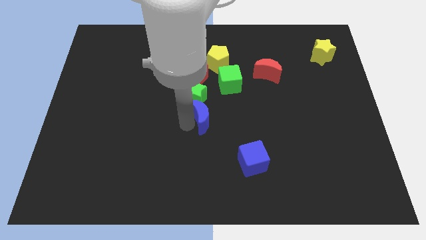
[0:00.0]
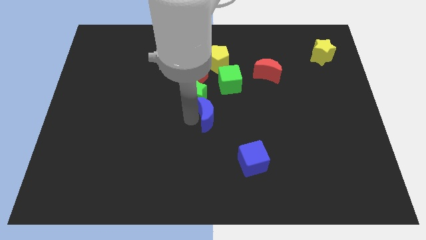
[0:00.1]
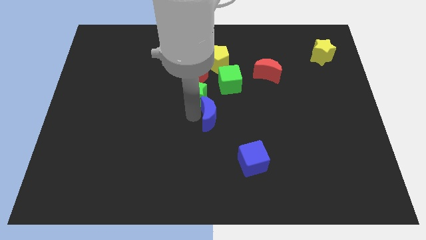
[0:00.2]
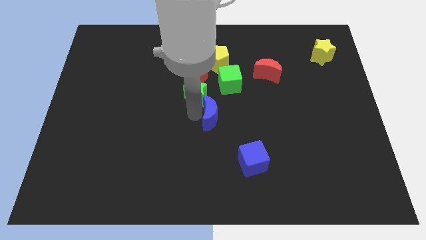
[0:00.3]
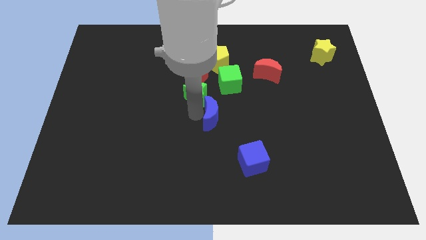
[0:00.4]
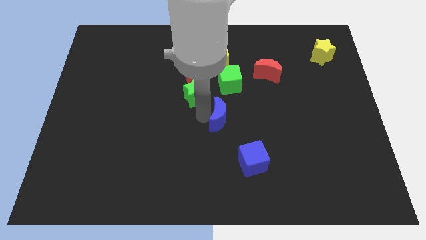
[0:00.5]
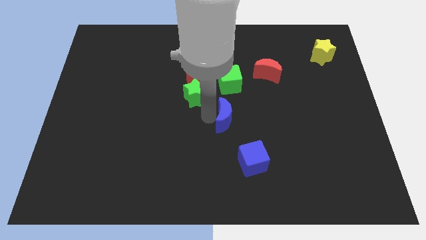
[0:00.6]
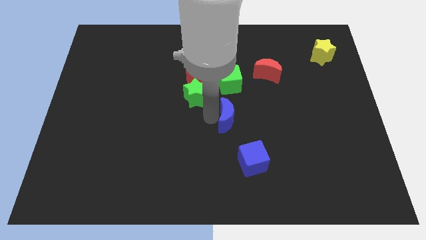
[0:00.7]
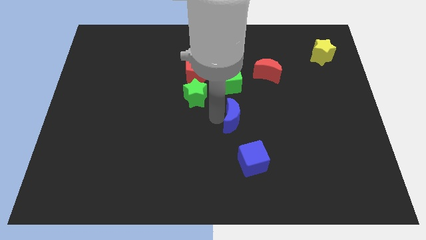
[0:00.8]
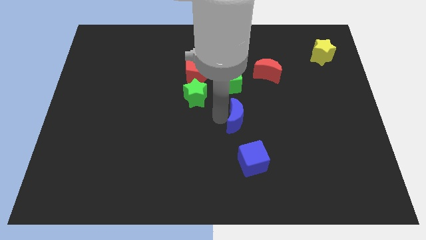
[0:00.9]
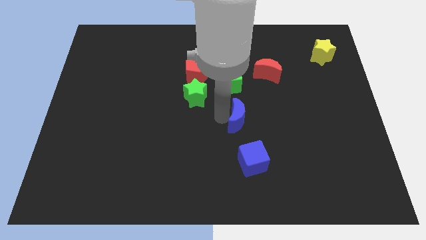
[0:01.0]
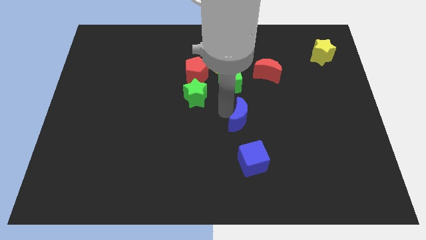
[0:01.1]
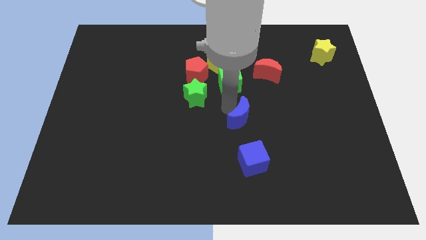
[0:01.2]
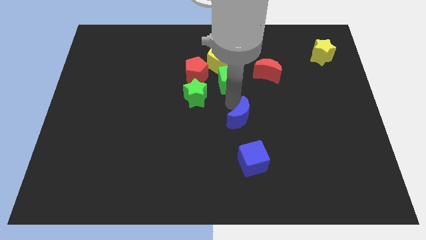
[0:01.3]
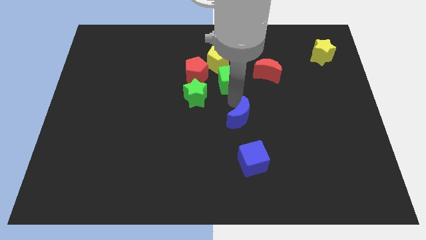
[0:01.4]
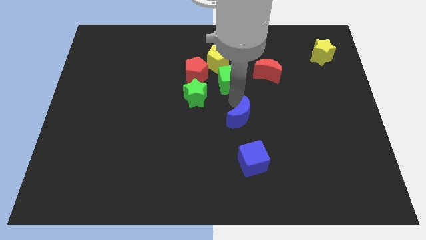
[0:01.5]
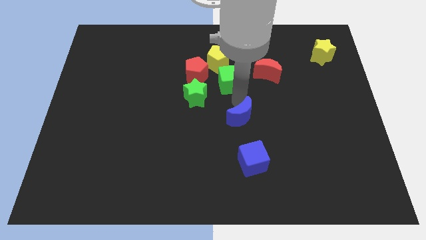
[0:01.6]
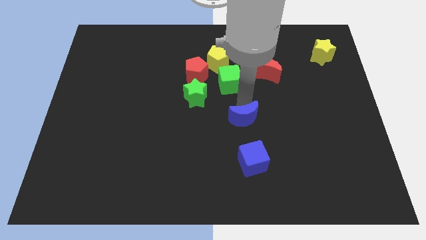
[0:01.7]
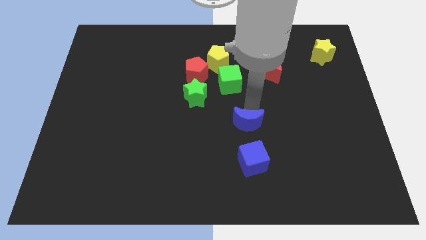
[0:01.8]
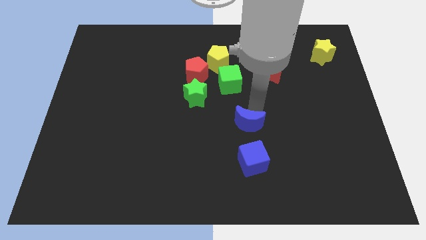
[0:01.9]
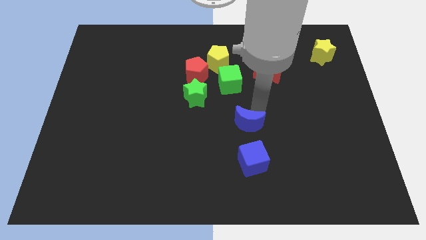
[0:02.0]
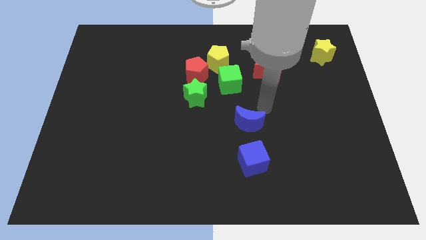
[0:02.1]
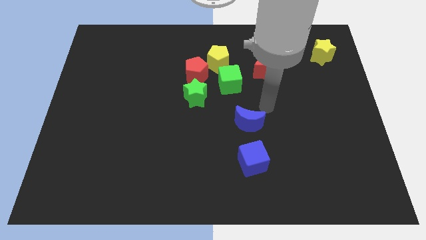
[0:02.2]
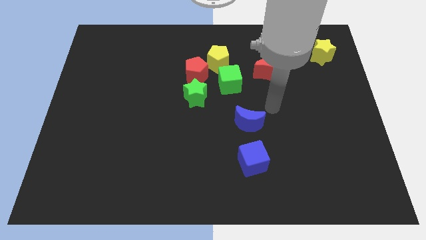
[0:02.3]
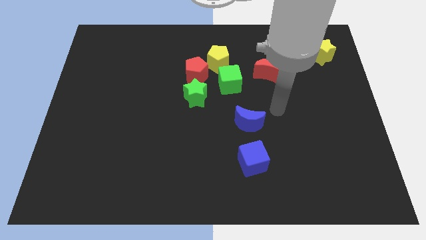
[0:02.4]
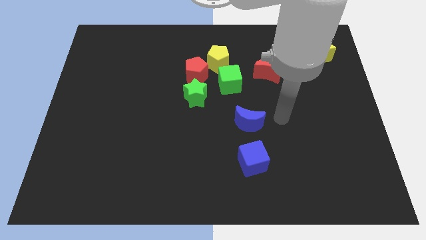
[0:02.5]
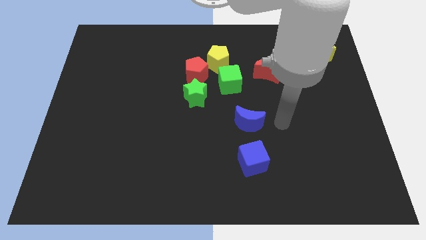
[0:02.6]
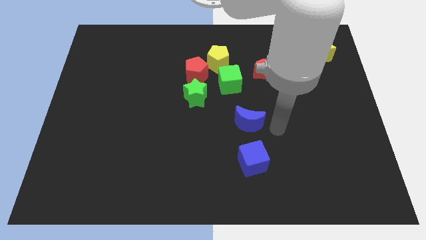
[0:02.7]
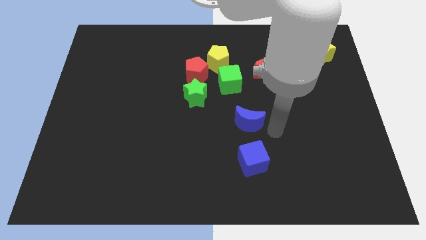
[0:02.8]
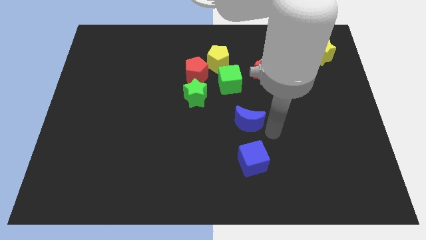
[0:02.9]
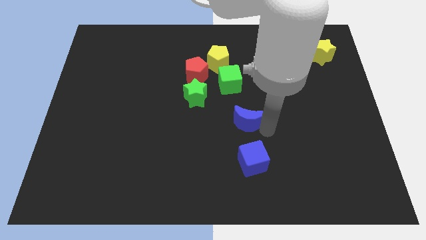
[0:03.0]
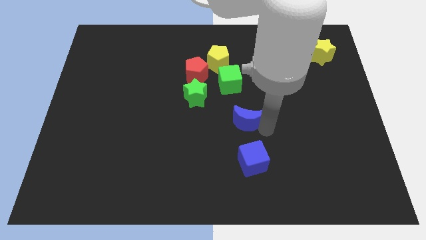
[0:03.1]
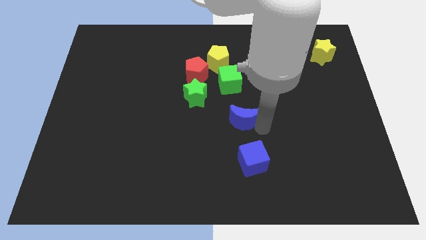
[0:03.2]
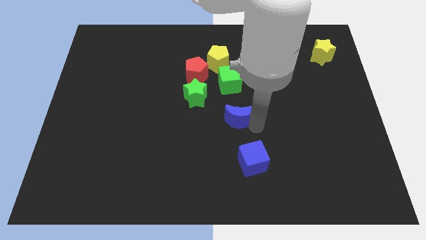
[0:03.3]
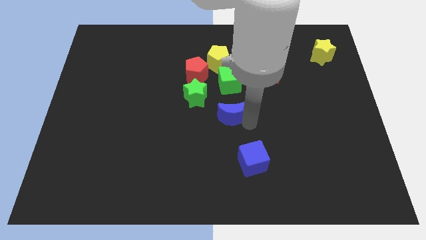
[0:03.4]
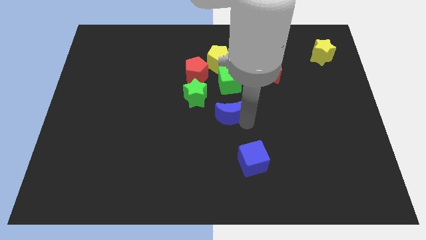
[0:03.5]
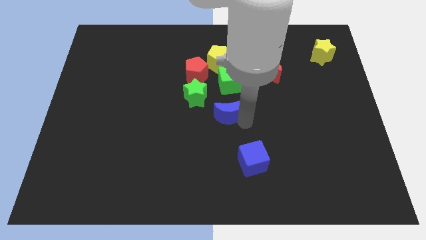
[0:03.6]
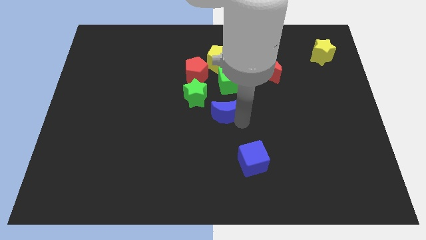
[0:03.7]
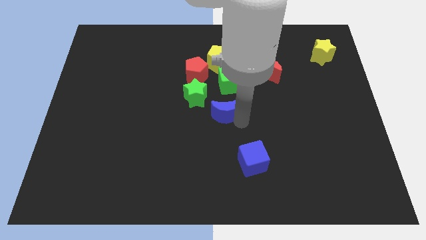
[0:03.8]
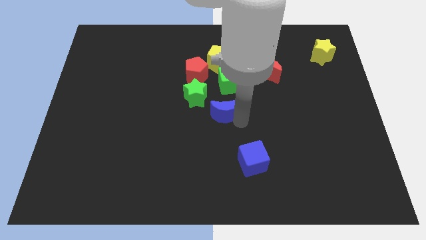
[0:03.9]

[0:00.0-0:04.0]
push the blue crescent towards the right side of green star

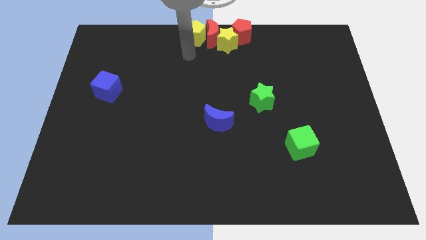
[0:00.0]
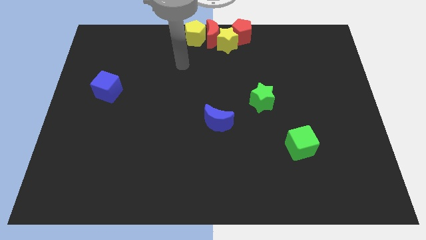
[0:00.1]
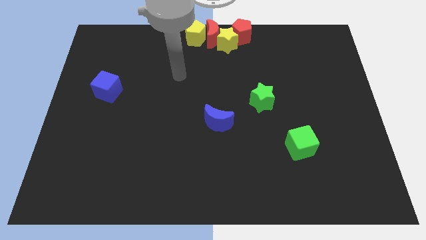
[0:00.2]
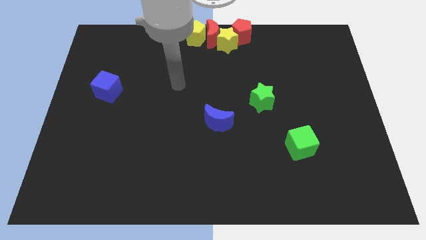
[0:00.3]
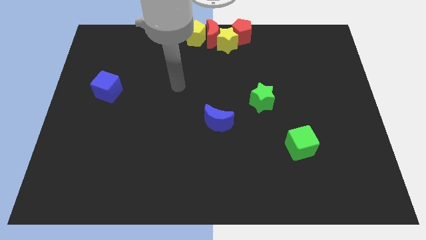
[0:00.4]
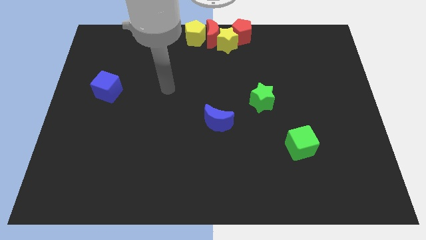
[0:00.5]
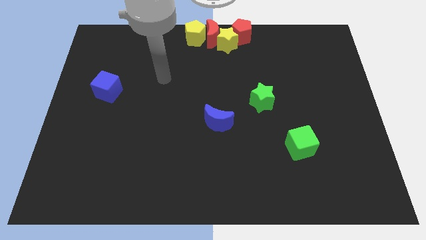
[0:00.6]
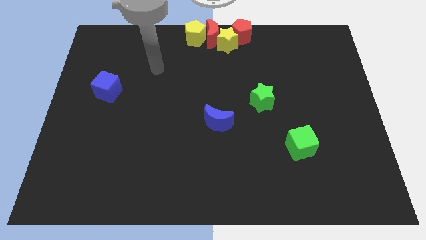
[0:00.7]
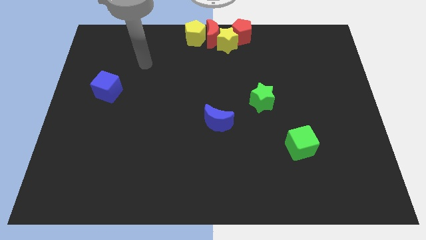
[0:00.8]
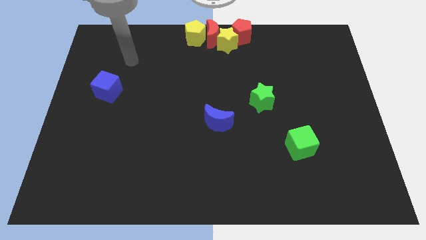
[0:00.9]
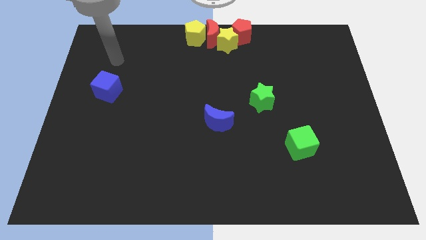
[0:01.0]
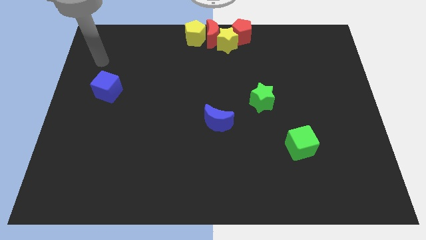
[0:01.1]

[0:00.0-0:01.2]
move your arm above the blue cube

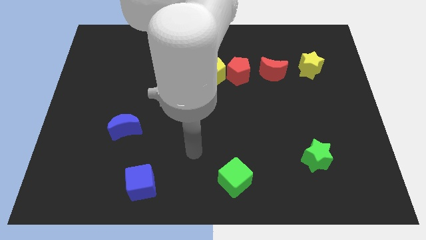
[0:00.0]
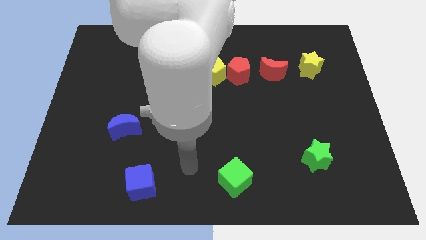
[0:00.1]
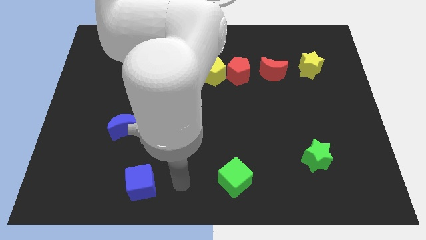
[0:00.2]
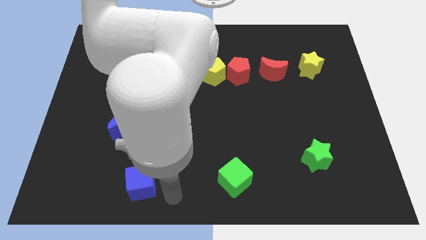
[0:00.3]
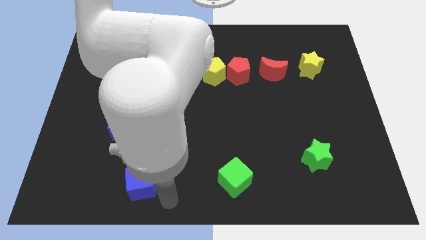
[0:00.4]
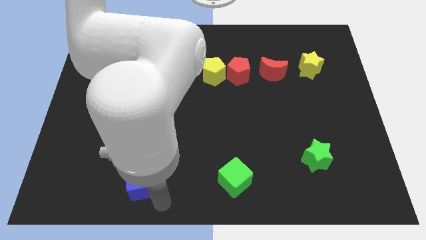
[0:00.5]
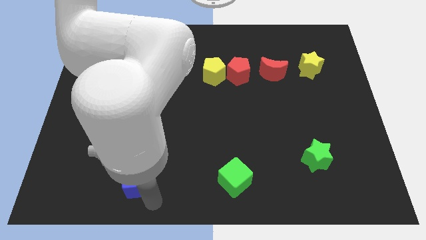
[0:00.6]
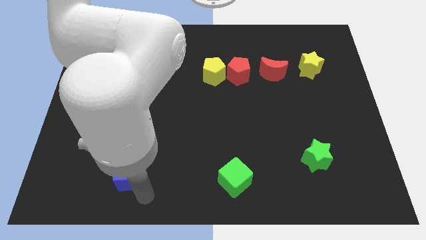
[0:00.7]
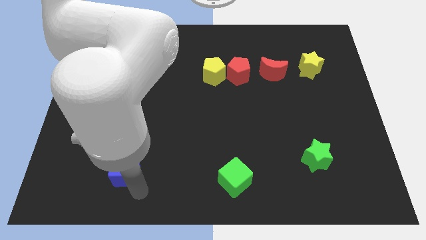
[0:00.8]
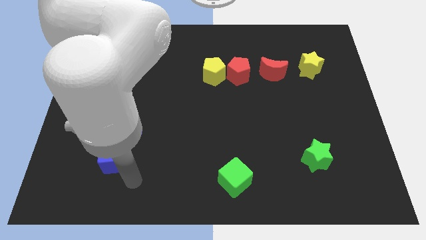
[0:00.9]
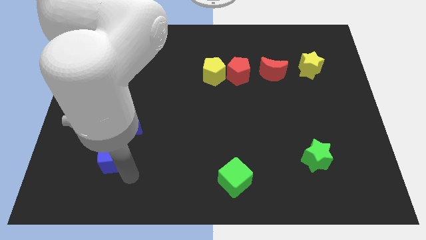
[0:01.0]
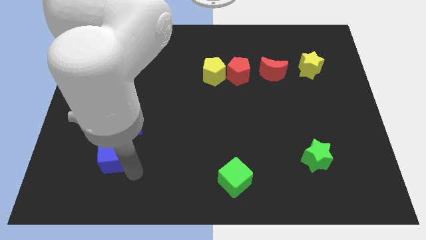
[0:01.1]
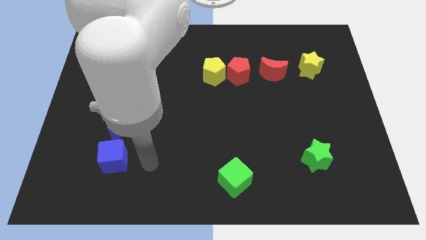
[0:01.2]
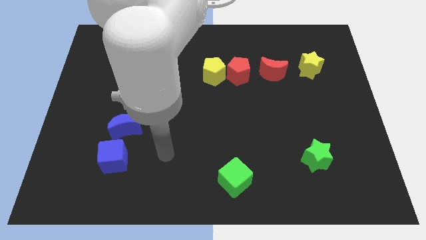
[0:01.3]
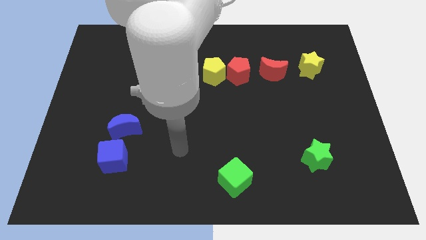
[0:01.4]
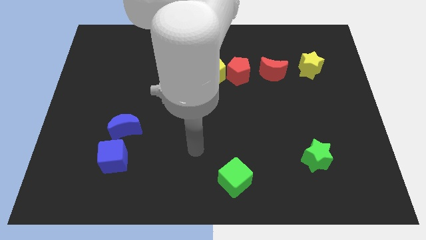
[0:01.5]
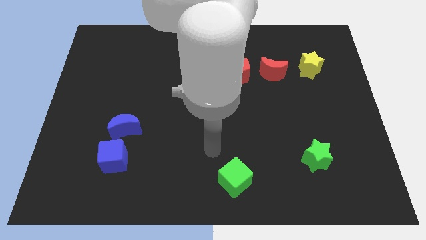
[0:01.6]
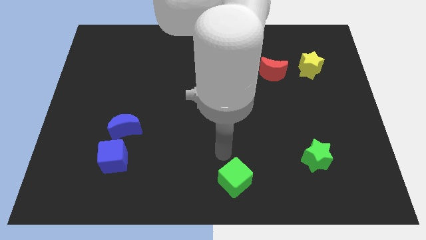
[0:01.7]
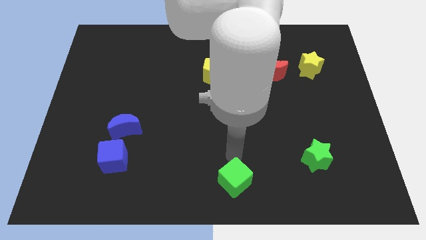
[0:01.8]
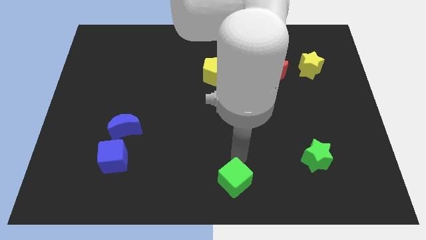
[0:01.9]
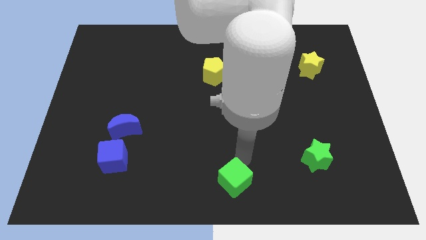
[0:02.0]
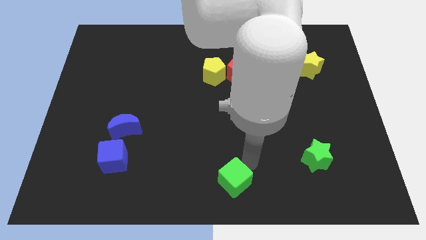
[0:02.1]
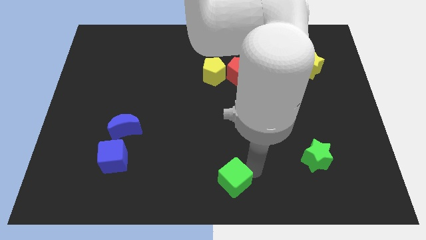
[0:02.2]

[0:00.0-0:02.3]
move the blue cube above to the blue moon

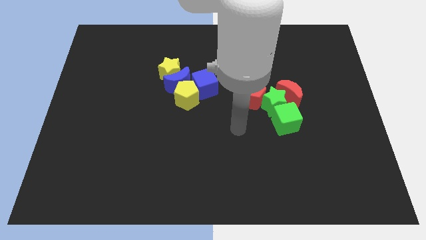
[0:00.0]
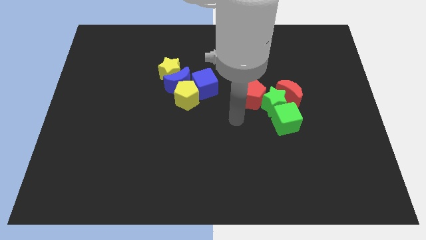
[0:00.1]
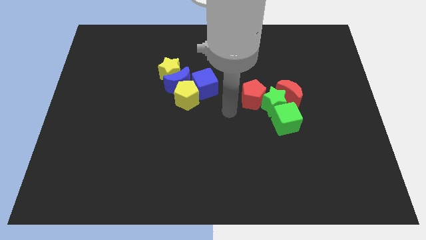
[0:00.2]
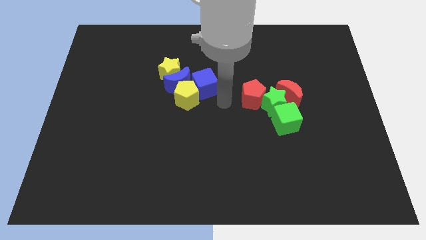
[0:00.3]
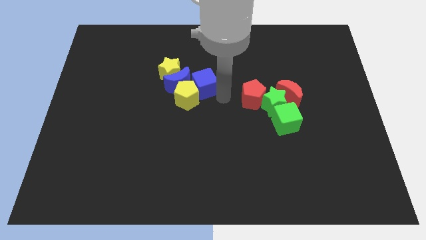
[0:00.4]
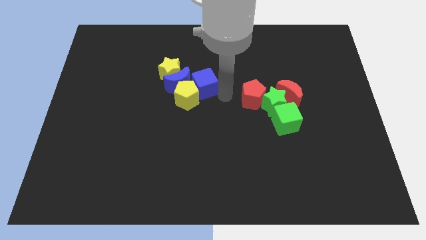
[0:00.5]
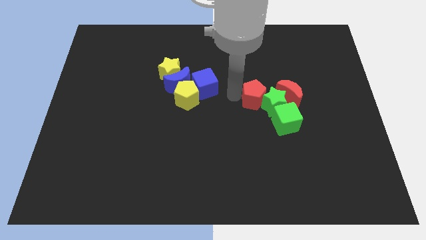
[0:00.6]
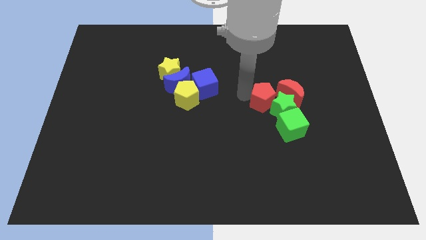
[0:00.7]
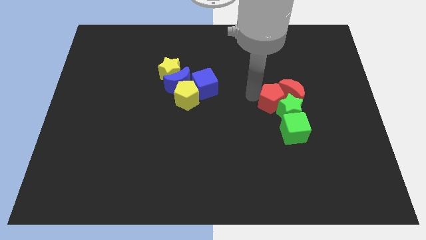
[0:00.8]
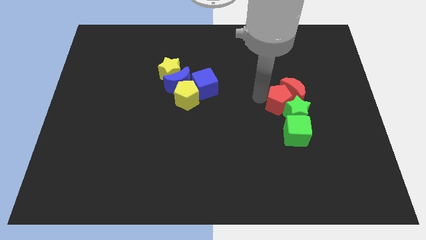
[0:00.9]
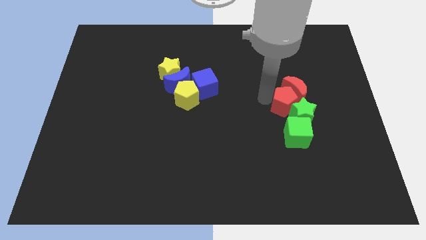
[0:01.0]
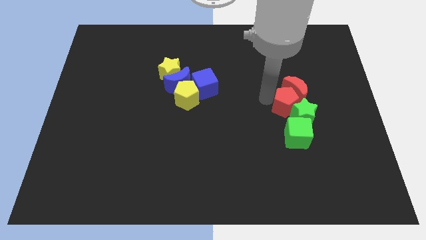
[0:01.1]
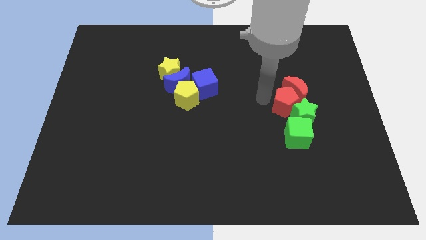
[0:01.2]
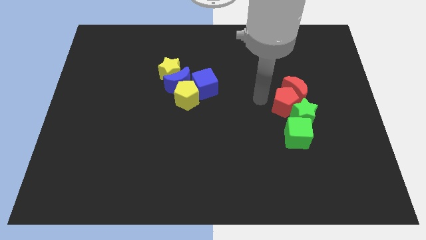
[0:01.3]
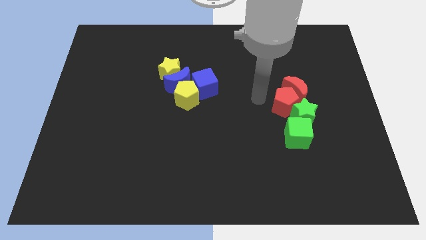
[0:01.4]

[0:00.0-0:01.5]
push green star with red pentagon
